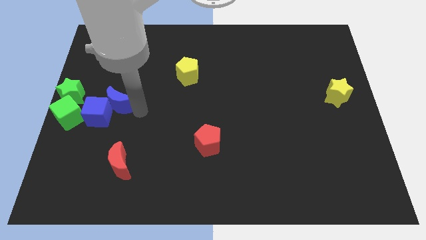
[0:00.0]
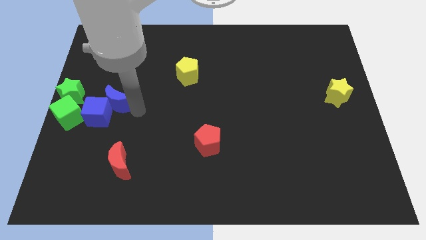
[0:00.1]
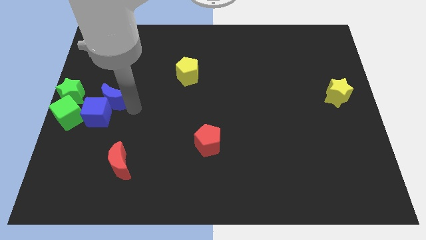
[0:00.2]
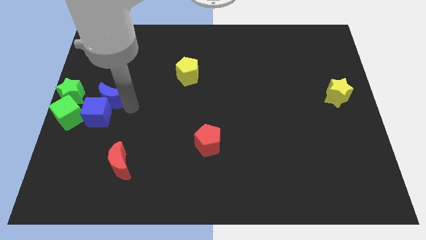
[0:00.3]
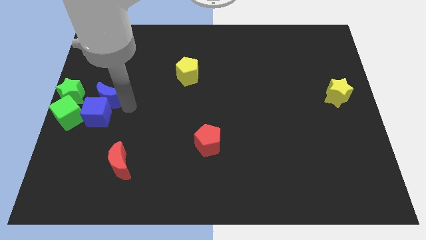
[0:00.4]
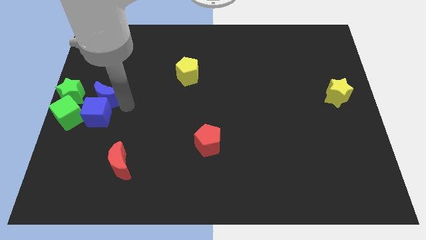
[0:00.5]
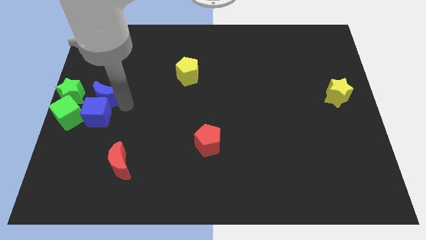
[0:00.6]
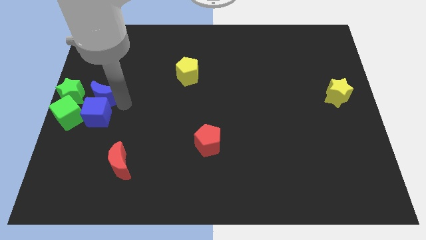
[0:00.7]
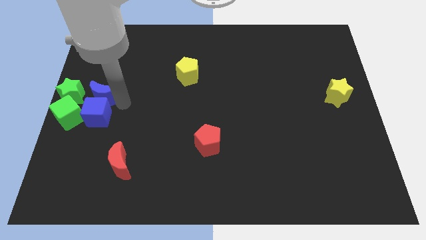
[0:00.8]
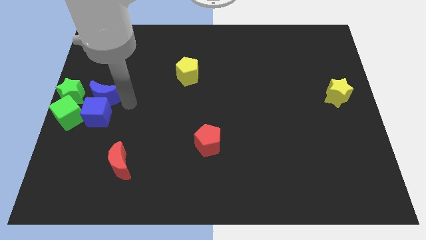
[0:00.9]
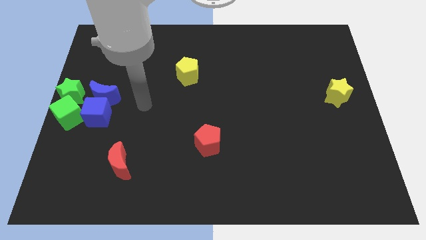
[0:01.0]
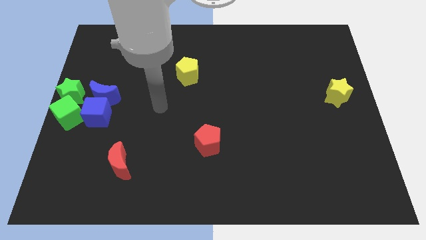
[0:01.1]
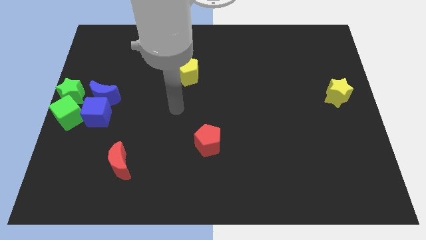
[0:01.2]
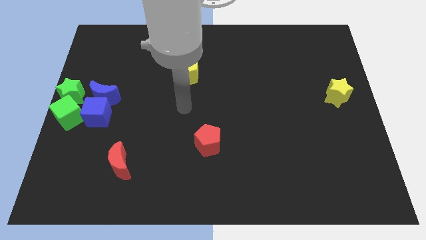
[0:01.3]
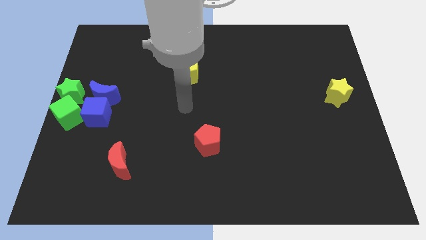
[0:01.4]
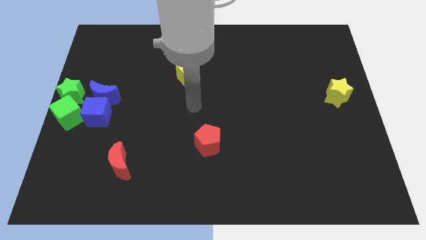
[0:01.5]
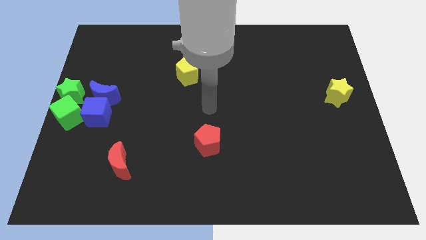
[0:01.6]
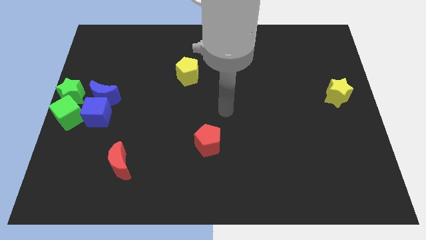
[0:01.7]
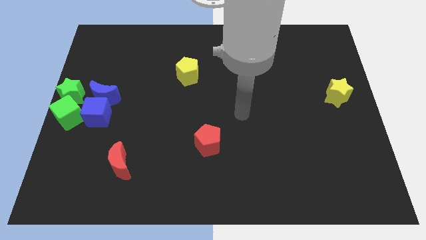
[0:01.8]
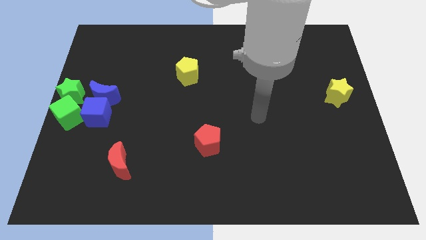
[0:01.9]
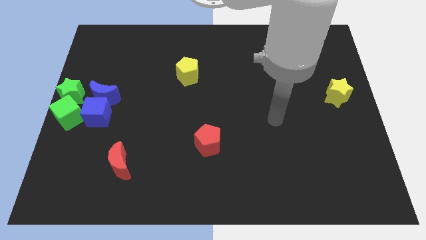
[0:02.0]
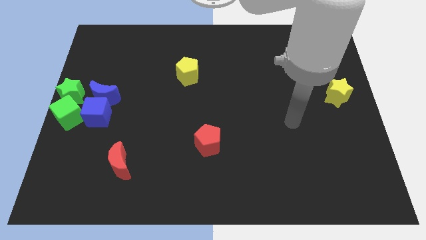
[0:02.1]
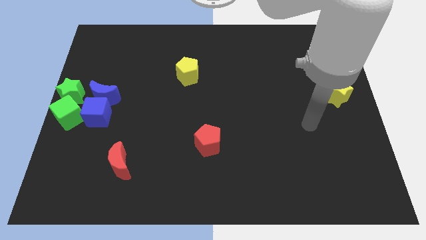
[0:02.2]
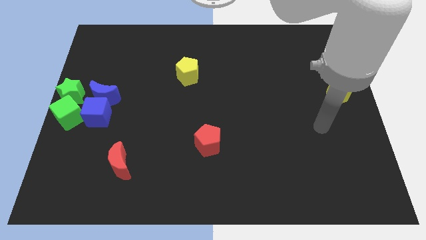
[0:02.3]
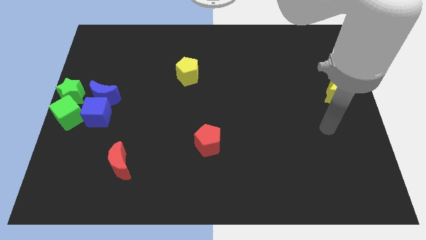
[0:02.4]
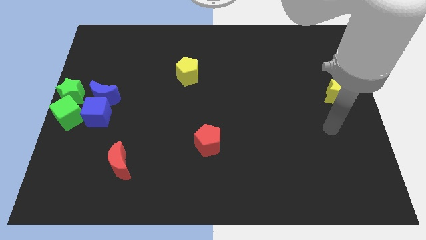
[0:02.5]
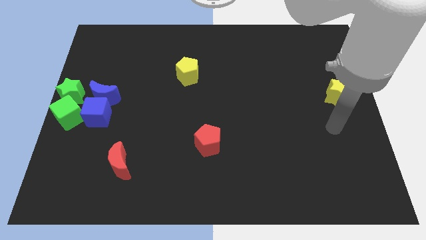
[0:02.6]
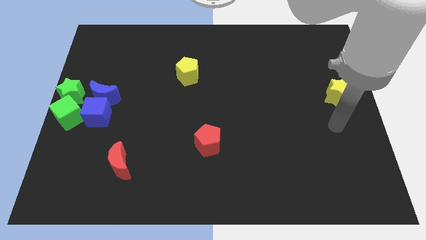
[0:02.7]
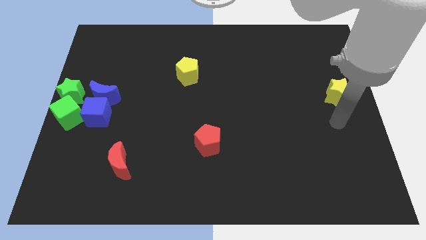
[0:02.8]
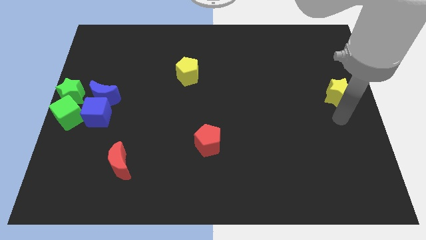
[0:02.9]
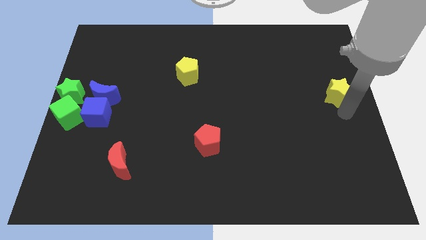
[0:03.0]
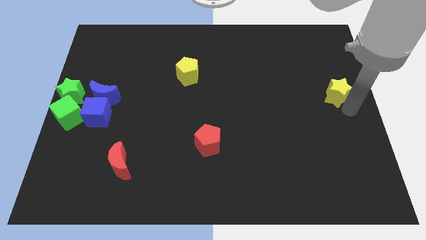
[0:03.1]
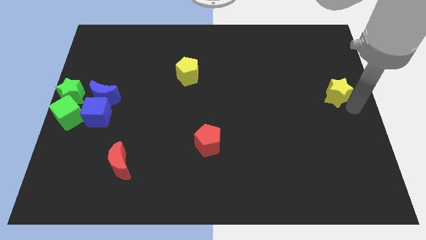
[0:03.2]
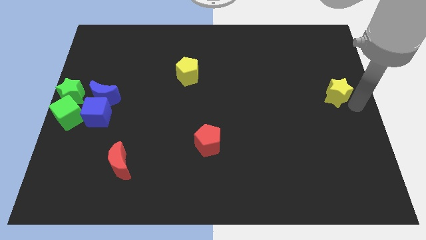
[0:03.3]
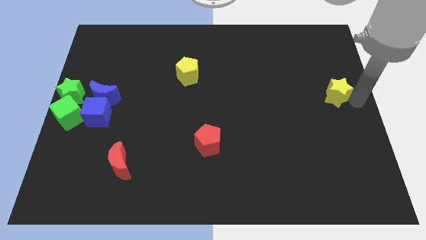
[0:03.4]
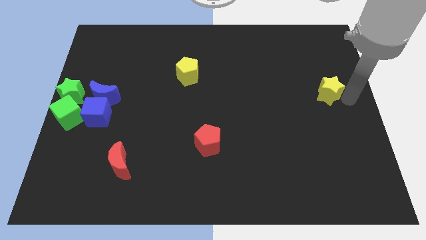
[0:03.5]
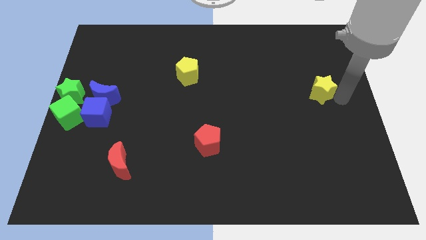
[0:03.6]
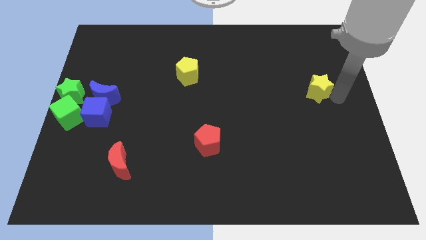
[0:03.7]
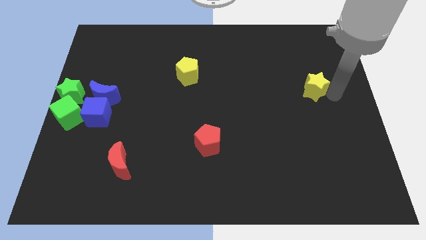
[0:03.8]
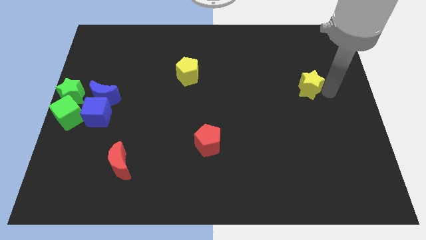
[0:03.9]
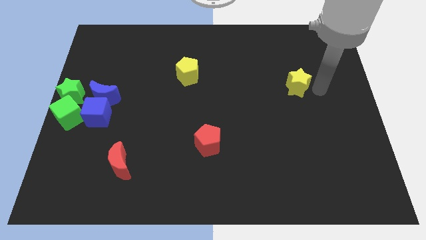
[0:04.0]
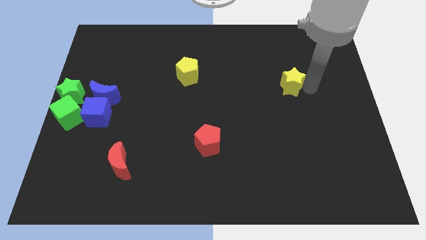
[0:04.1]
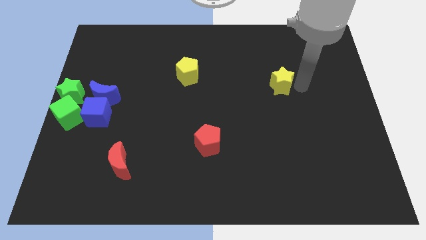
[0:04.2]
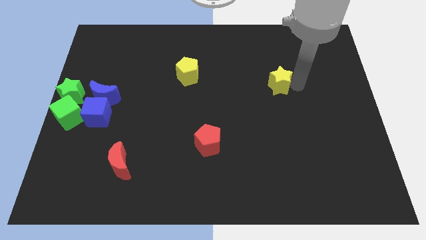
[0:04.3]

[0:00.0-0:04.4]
move the yellow star towards the center of the board

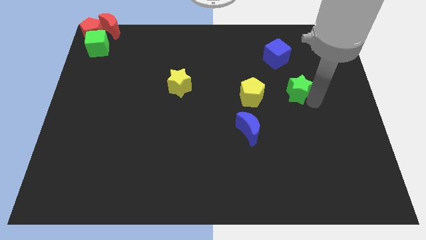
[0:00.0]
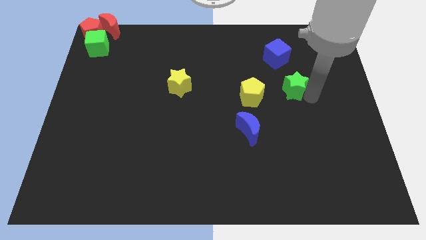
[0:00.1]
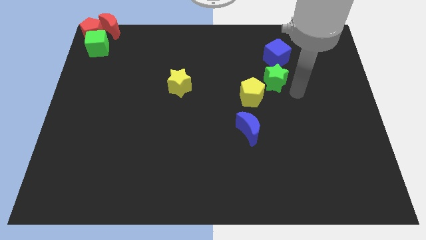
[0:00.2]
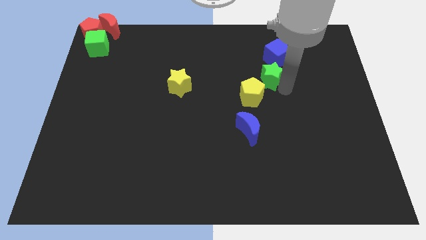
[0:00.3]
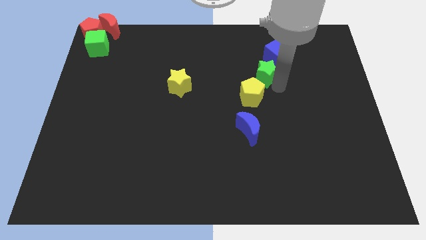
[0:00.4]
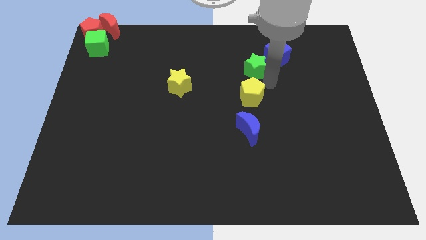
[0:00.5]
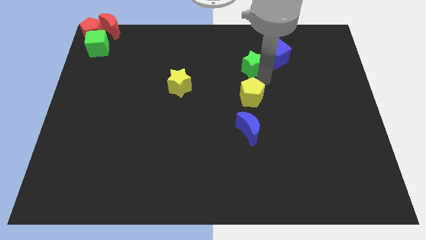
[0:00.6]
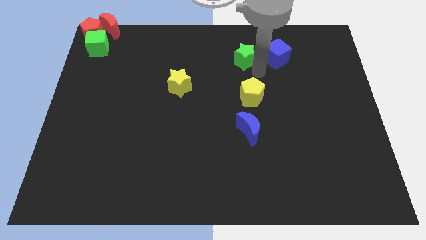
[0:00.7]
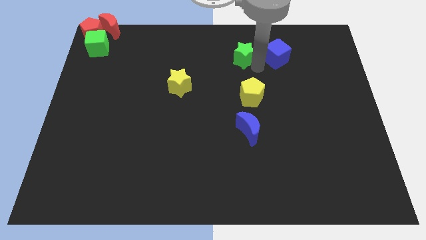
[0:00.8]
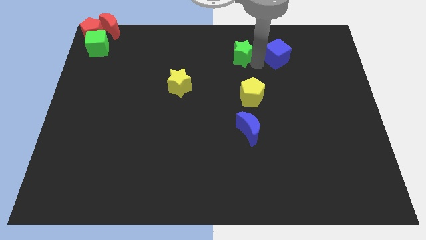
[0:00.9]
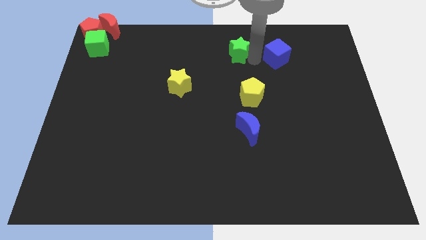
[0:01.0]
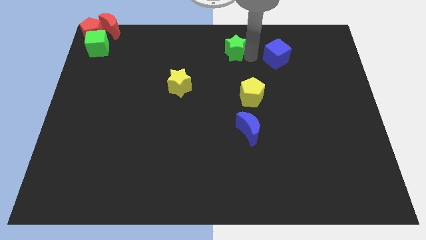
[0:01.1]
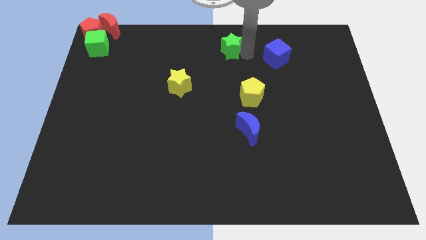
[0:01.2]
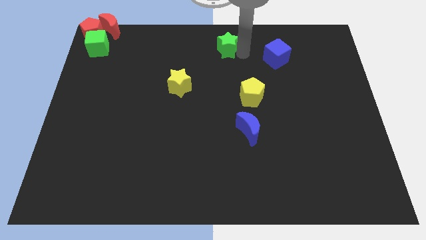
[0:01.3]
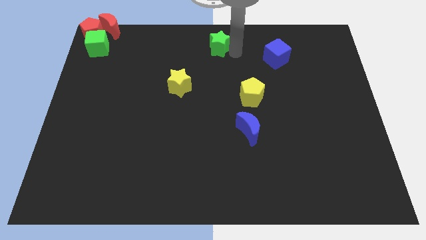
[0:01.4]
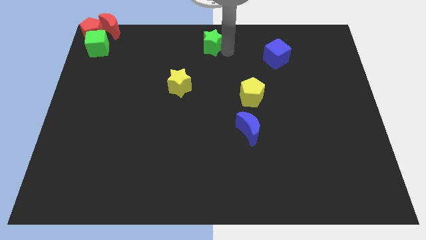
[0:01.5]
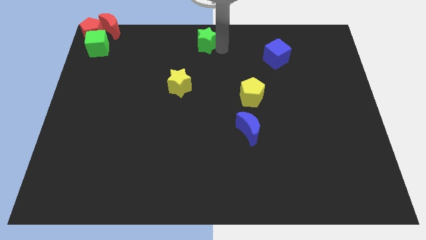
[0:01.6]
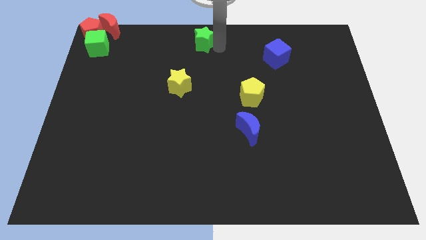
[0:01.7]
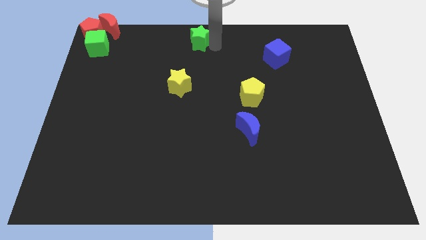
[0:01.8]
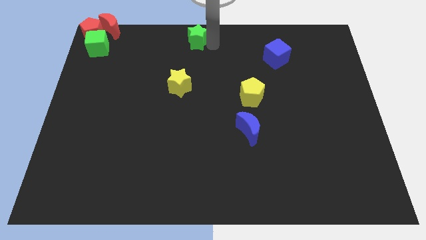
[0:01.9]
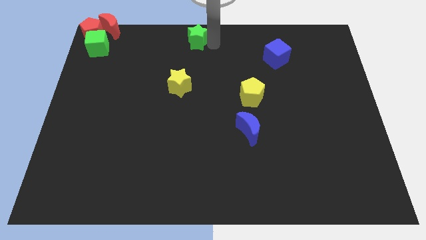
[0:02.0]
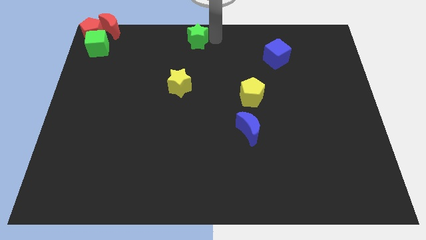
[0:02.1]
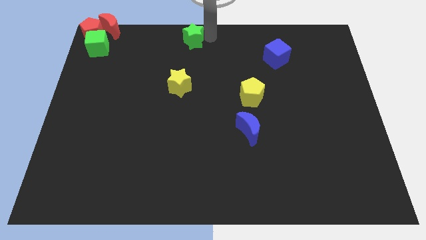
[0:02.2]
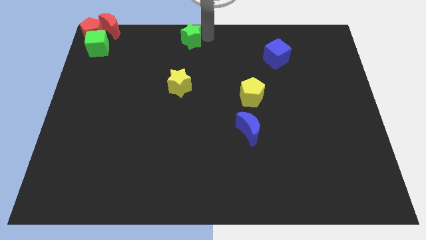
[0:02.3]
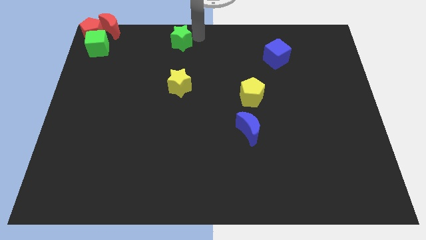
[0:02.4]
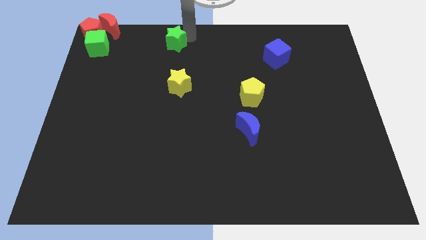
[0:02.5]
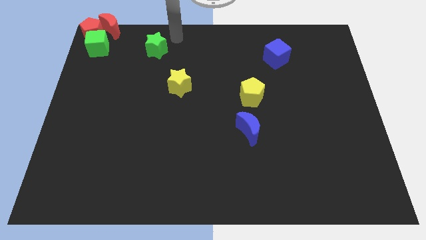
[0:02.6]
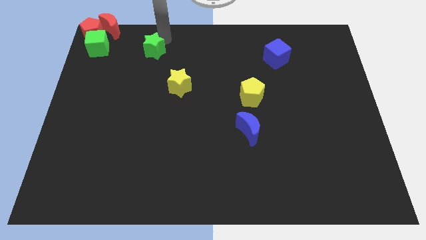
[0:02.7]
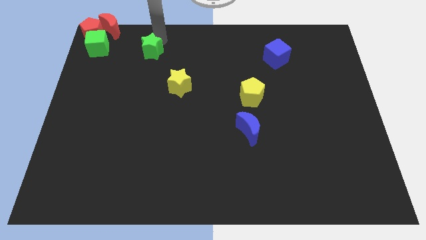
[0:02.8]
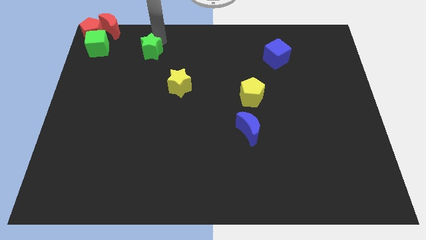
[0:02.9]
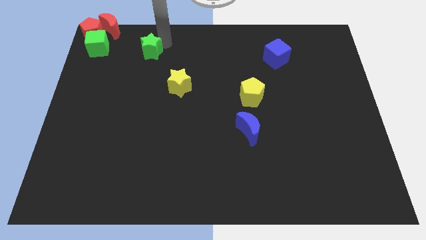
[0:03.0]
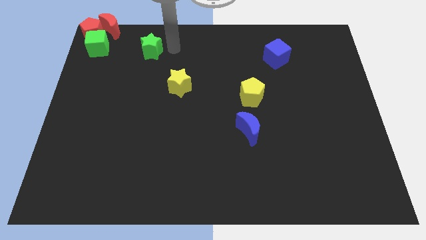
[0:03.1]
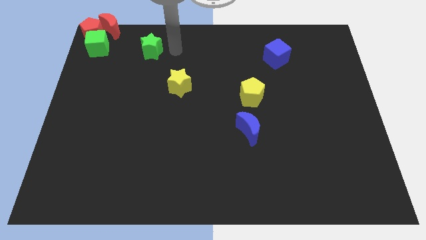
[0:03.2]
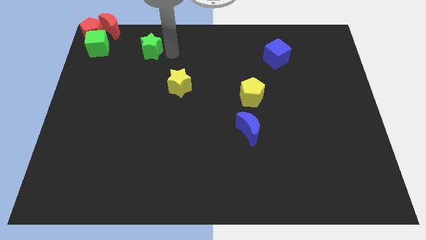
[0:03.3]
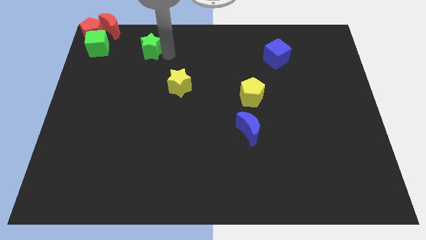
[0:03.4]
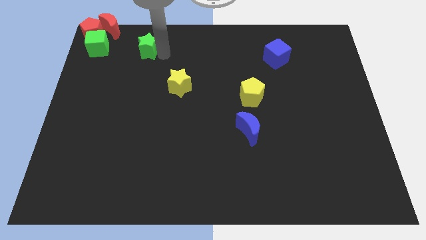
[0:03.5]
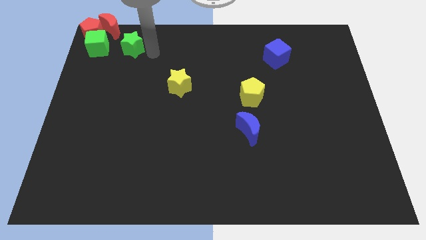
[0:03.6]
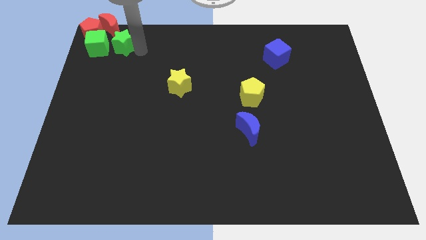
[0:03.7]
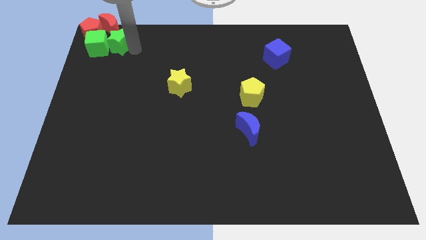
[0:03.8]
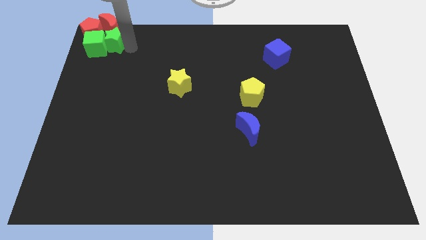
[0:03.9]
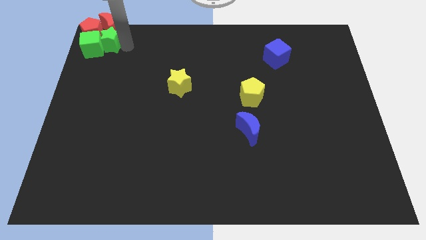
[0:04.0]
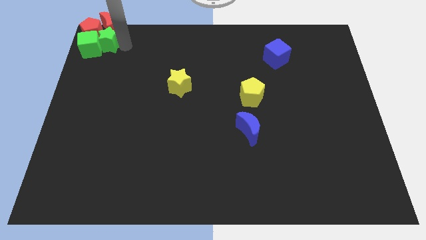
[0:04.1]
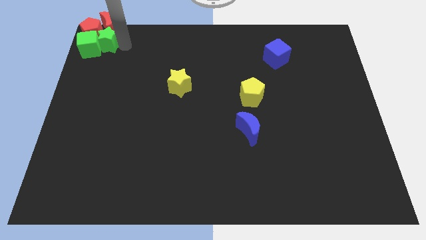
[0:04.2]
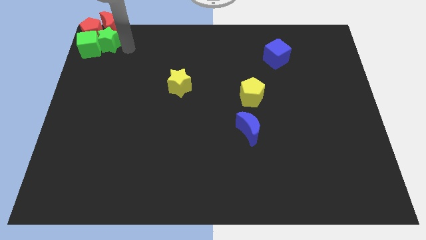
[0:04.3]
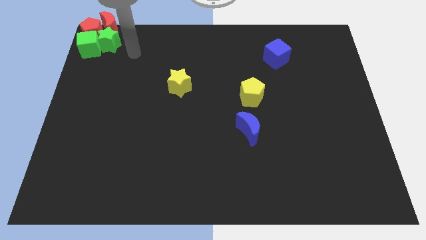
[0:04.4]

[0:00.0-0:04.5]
push green star into green cube

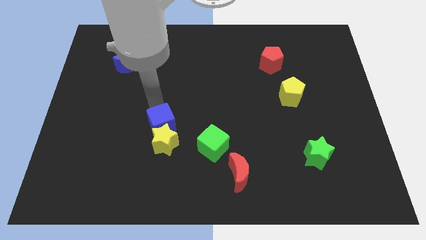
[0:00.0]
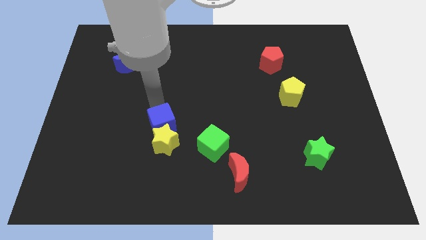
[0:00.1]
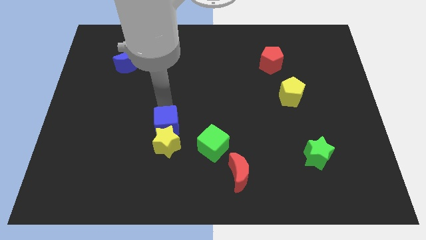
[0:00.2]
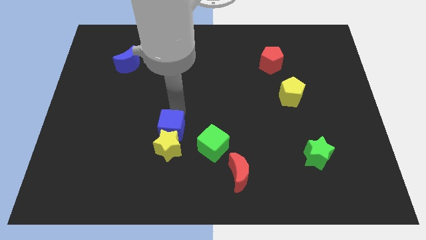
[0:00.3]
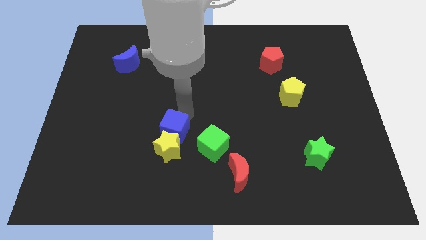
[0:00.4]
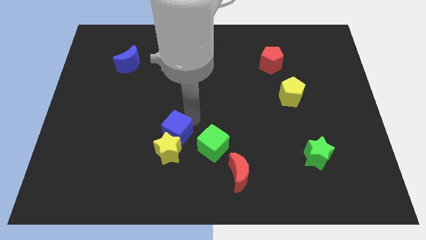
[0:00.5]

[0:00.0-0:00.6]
push blue cube in to yellow star
